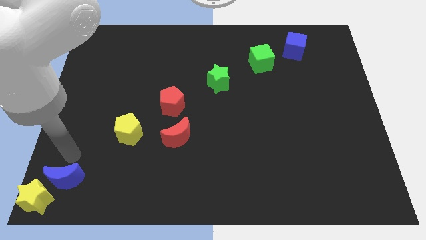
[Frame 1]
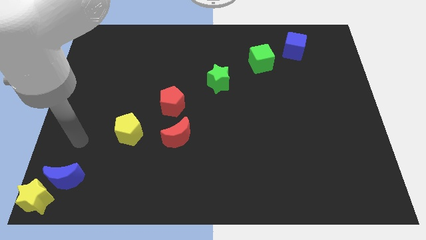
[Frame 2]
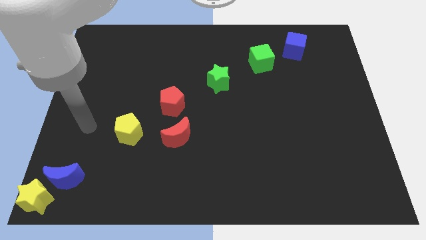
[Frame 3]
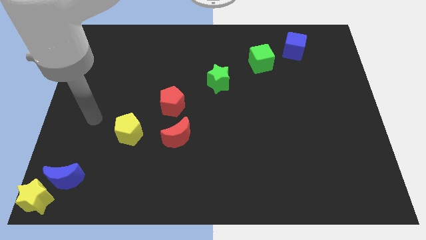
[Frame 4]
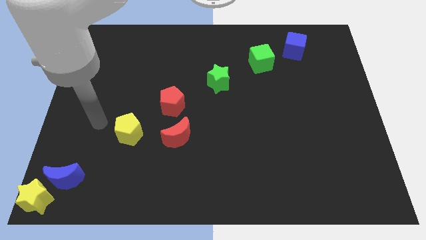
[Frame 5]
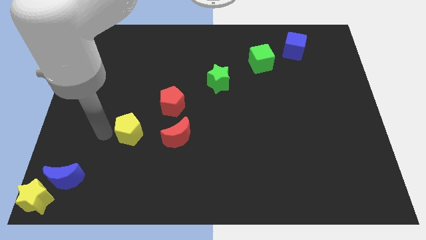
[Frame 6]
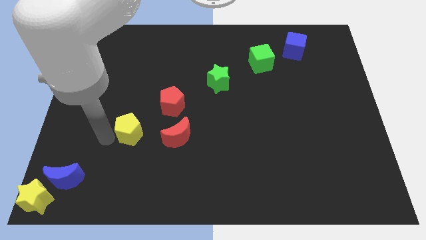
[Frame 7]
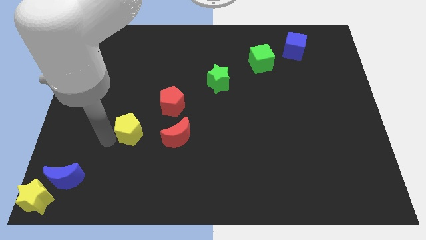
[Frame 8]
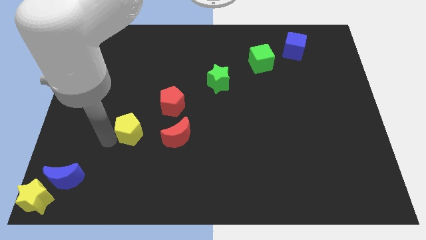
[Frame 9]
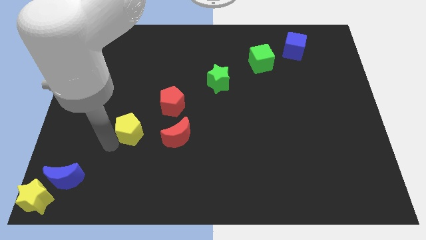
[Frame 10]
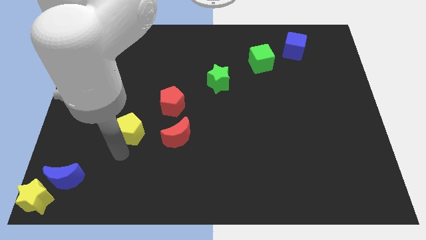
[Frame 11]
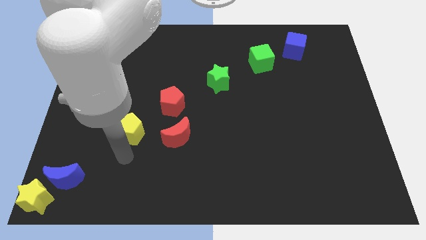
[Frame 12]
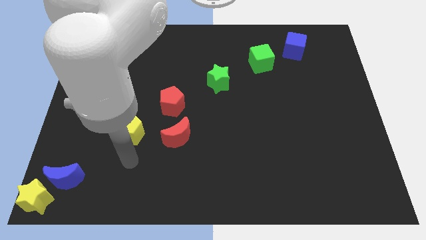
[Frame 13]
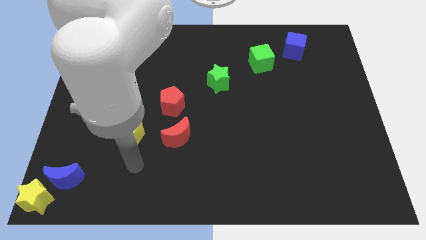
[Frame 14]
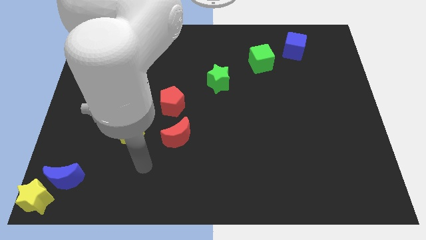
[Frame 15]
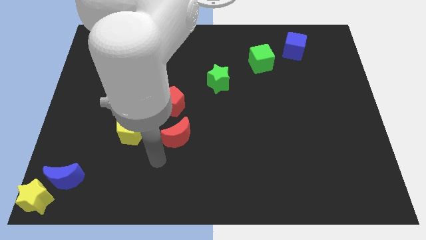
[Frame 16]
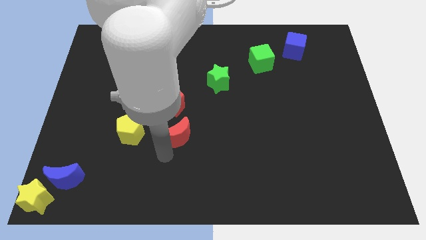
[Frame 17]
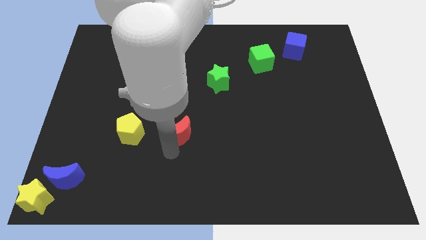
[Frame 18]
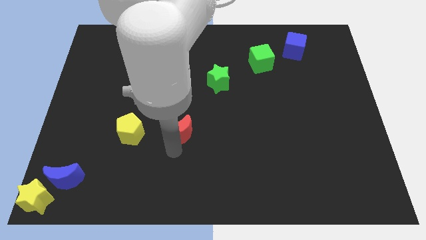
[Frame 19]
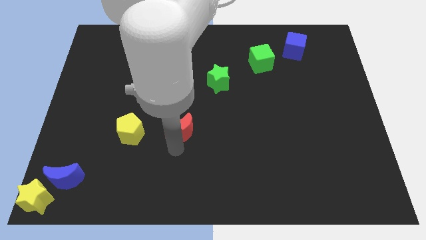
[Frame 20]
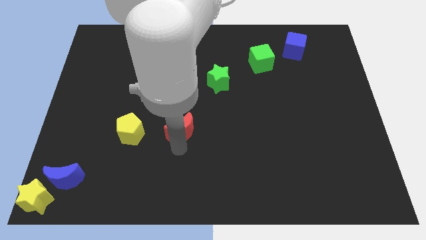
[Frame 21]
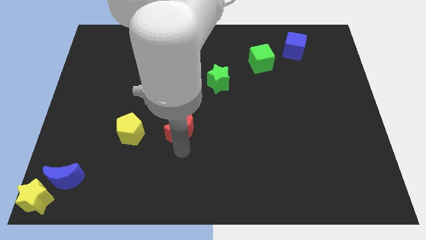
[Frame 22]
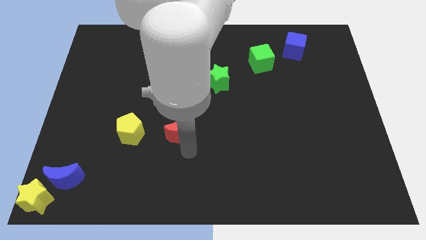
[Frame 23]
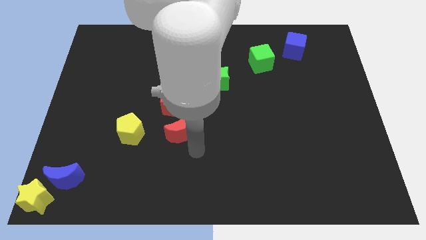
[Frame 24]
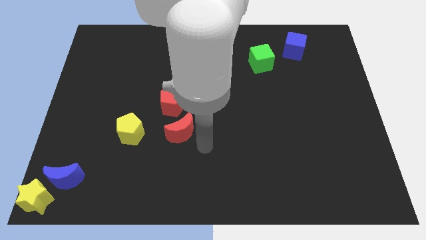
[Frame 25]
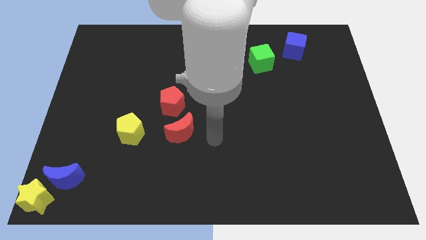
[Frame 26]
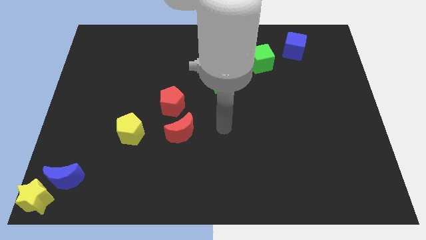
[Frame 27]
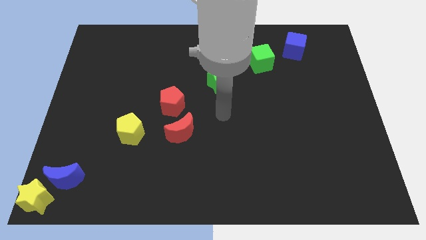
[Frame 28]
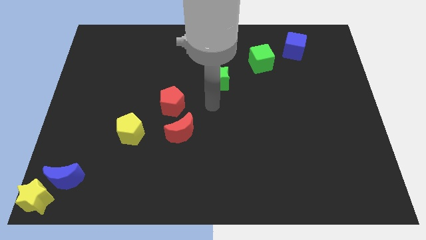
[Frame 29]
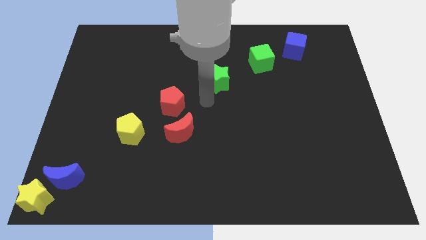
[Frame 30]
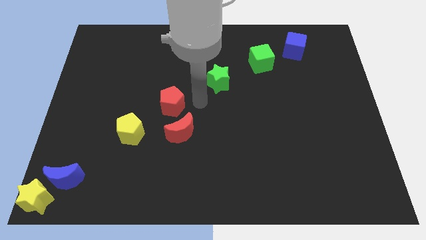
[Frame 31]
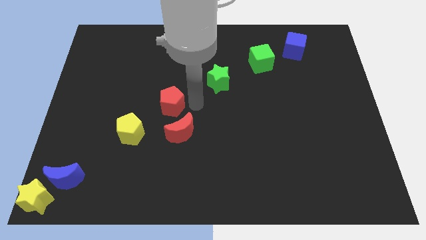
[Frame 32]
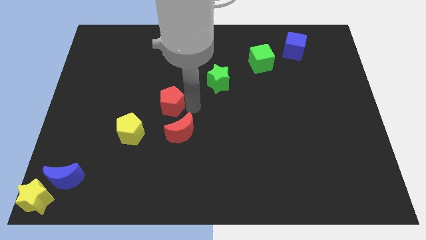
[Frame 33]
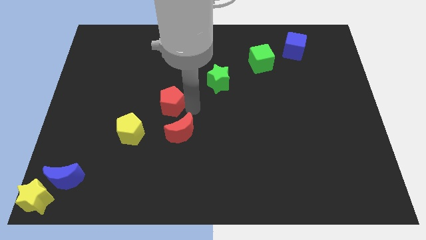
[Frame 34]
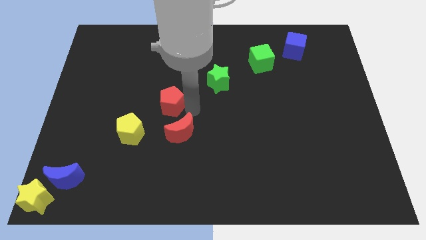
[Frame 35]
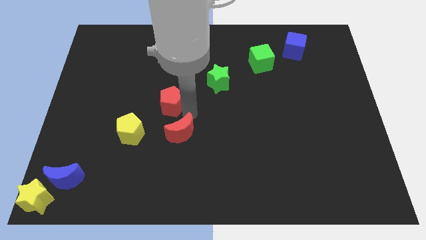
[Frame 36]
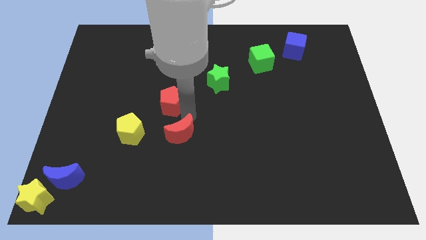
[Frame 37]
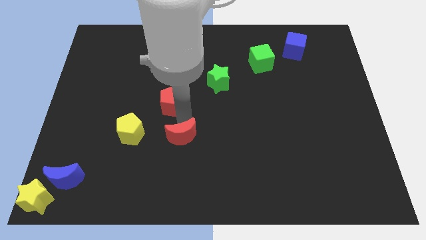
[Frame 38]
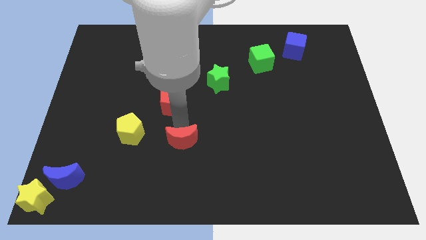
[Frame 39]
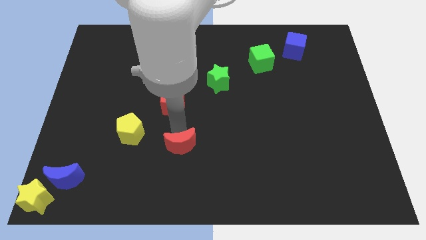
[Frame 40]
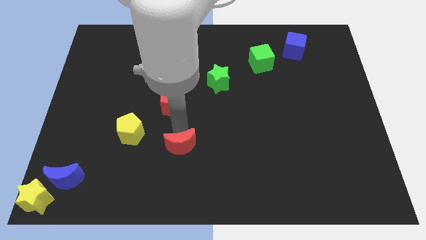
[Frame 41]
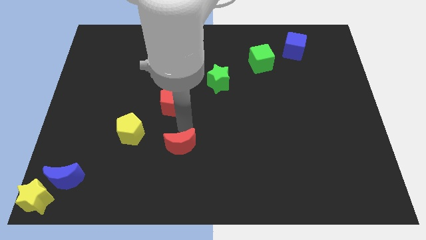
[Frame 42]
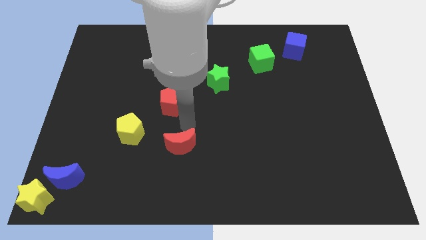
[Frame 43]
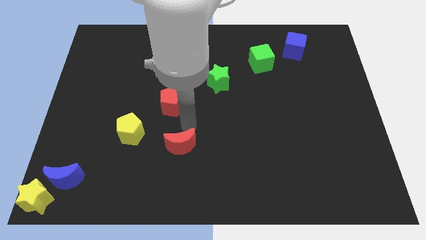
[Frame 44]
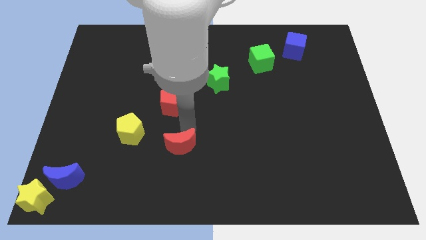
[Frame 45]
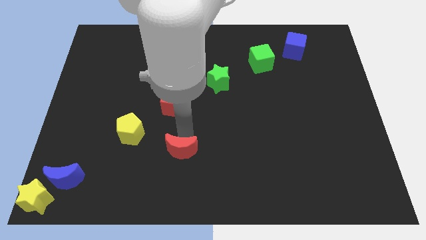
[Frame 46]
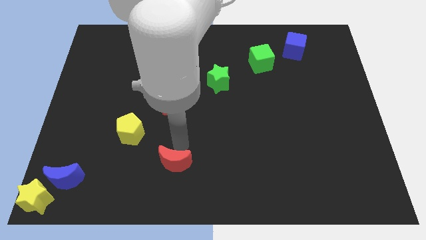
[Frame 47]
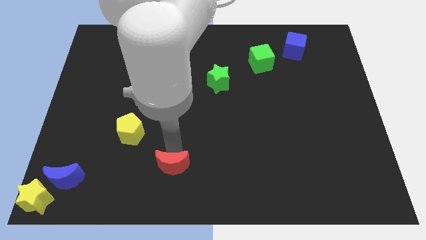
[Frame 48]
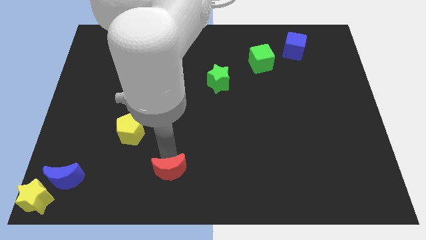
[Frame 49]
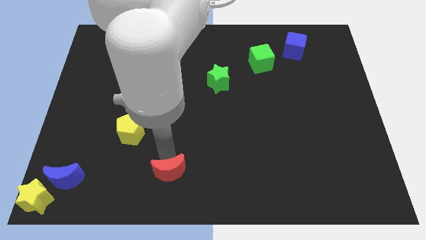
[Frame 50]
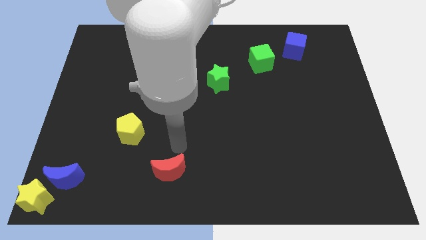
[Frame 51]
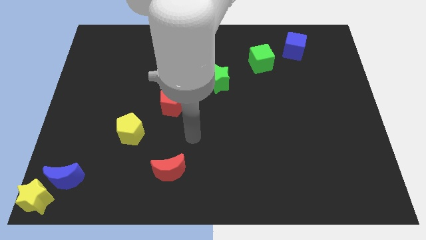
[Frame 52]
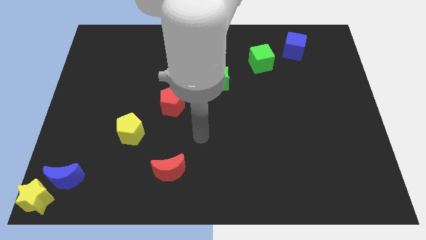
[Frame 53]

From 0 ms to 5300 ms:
push the red crescent to the bottom of the board

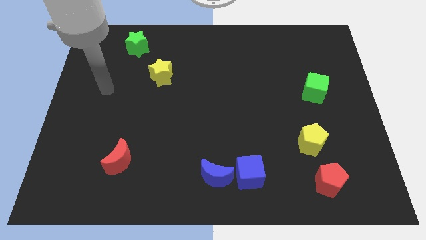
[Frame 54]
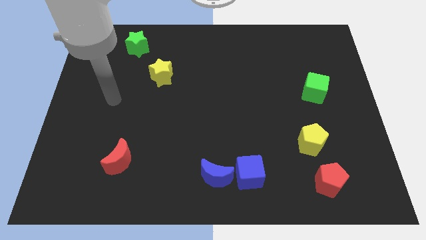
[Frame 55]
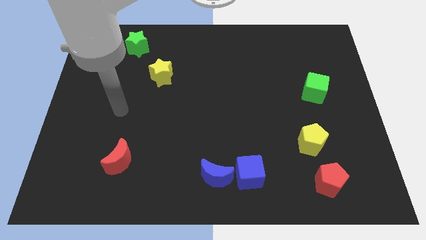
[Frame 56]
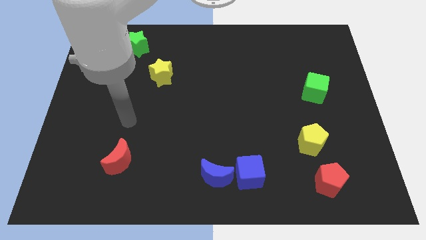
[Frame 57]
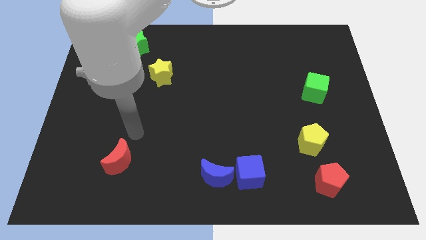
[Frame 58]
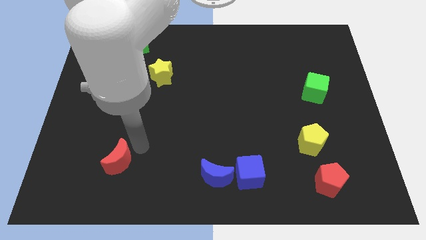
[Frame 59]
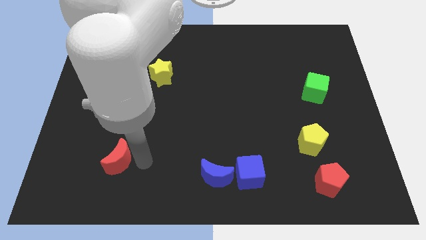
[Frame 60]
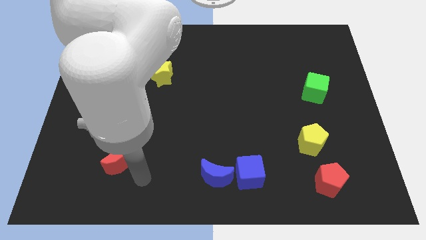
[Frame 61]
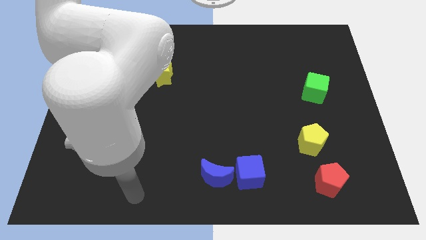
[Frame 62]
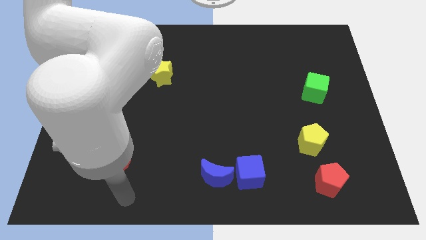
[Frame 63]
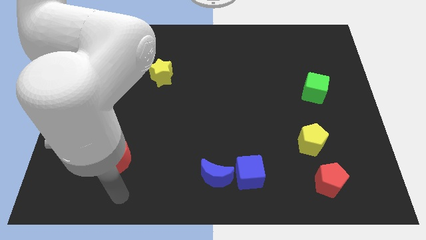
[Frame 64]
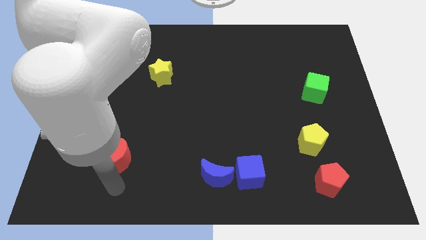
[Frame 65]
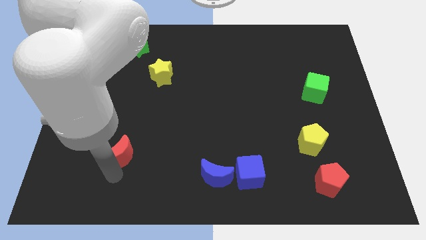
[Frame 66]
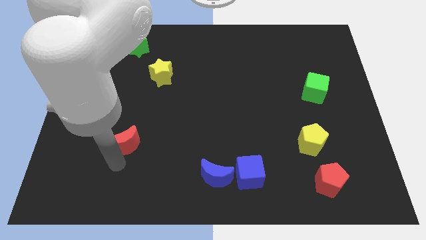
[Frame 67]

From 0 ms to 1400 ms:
move the arm to the red crescent

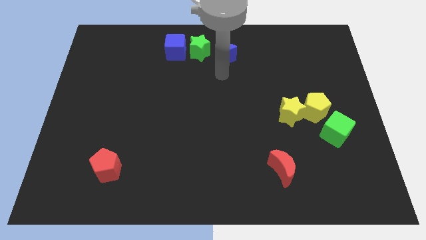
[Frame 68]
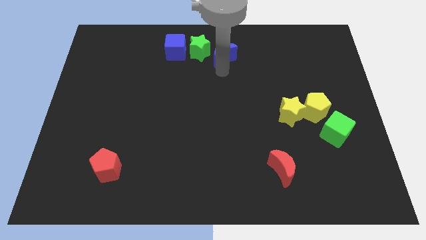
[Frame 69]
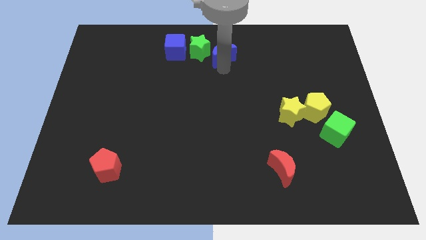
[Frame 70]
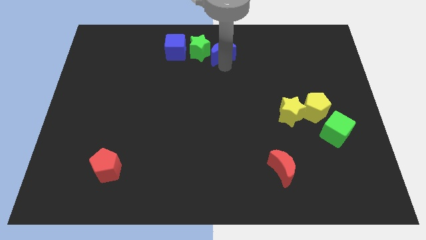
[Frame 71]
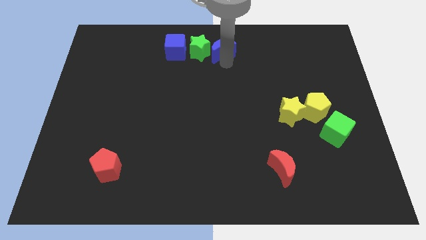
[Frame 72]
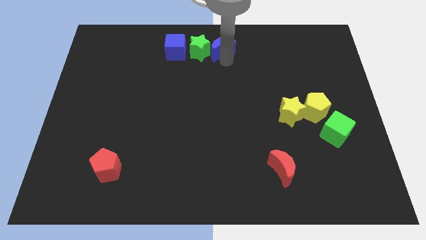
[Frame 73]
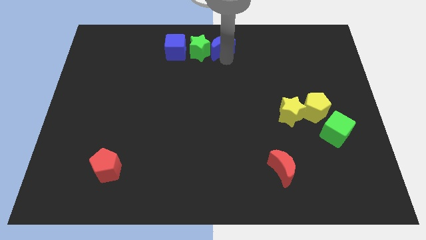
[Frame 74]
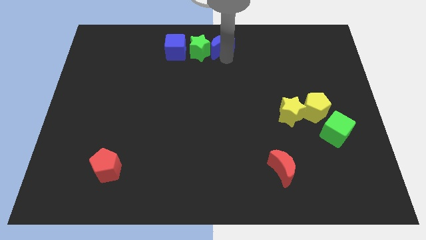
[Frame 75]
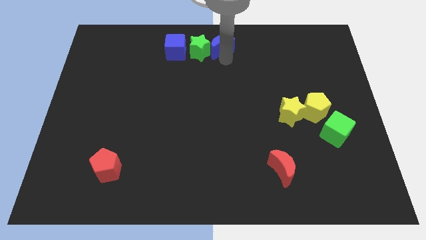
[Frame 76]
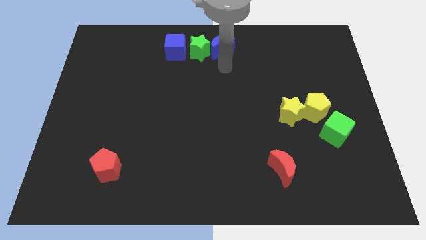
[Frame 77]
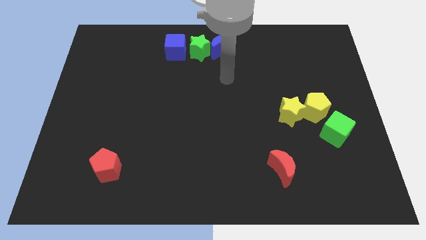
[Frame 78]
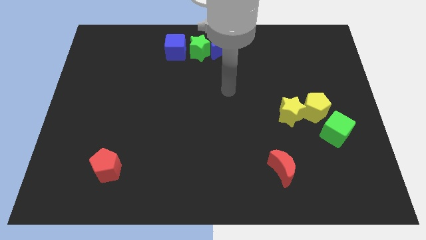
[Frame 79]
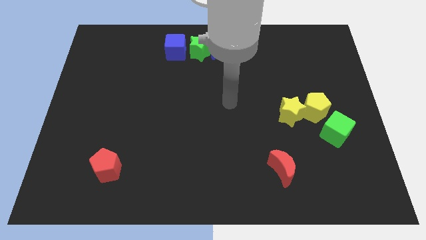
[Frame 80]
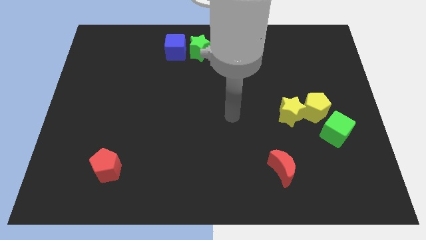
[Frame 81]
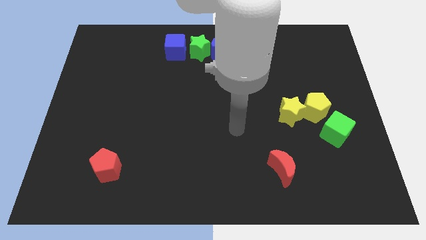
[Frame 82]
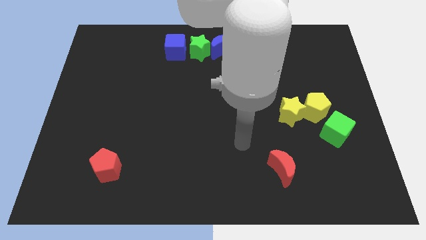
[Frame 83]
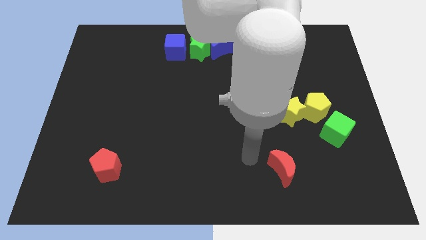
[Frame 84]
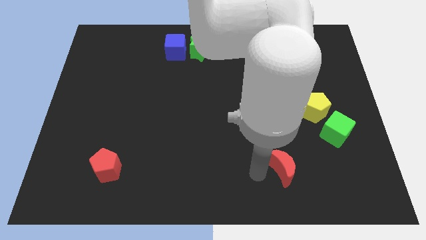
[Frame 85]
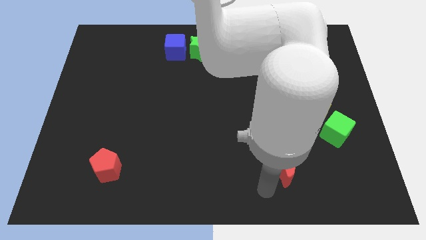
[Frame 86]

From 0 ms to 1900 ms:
move the arm towards the red crescent

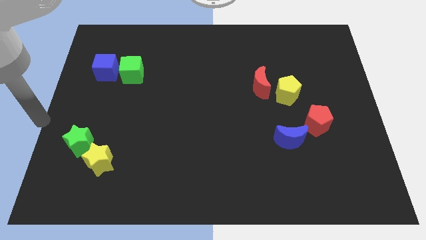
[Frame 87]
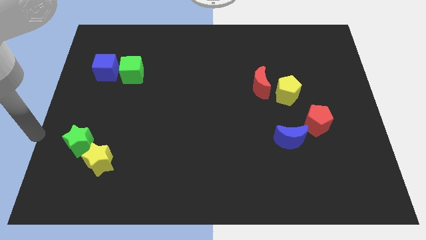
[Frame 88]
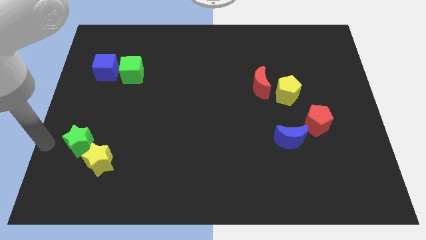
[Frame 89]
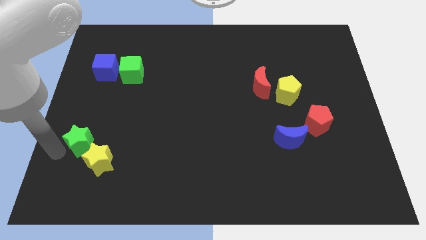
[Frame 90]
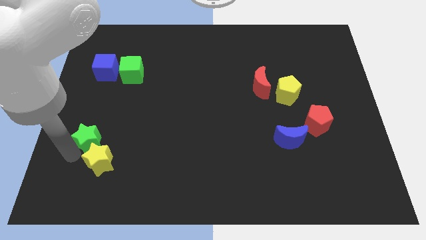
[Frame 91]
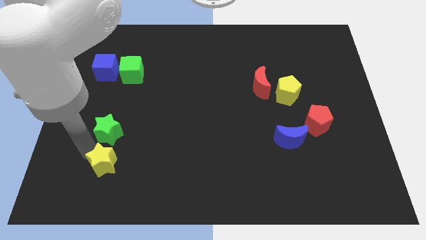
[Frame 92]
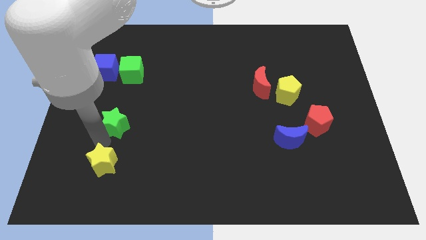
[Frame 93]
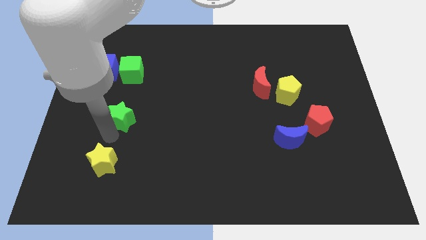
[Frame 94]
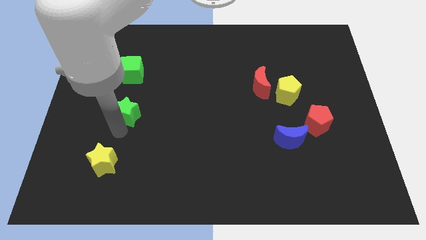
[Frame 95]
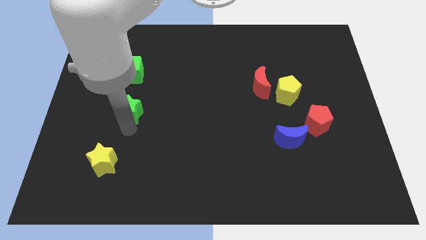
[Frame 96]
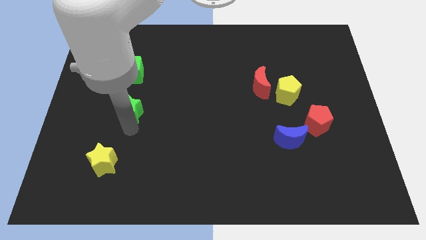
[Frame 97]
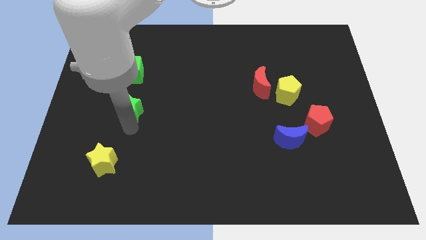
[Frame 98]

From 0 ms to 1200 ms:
separate the green star from the yellow star
